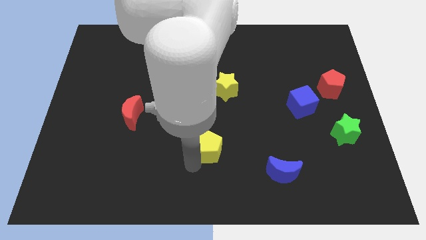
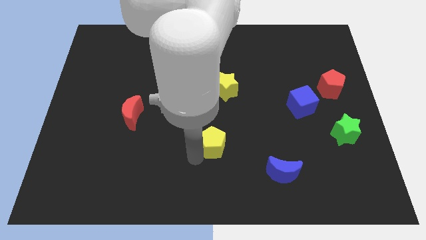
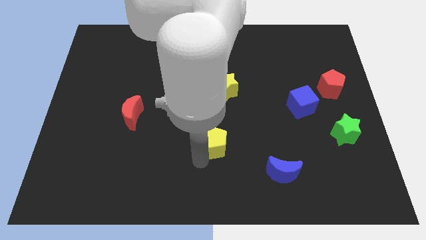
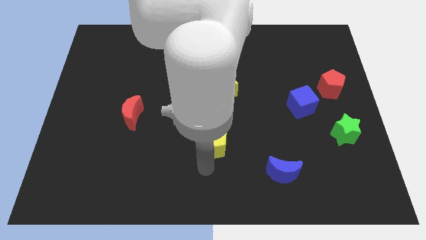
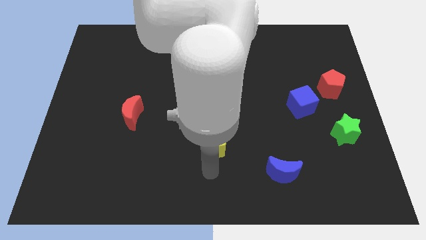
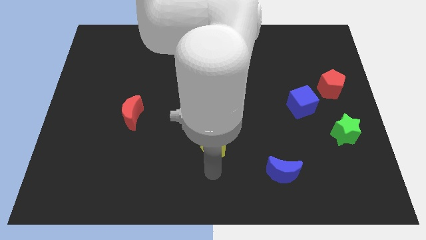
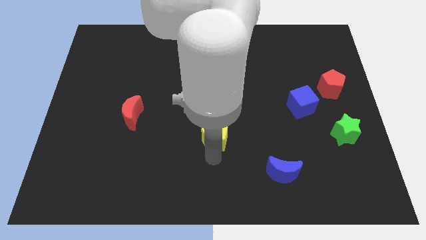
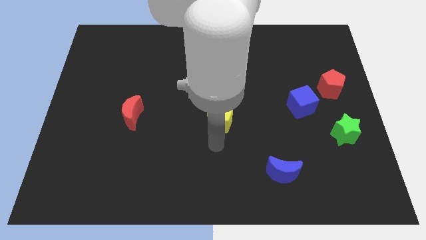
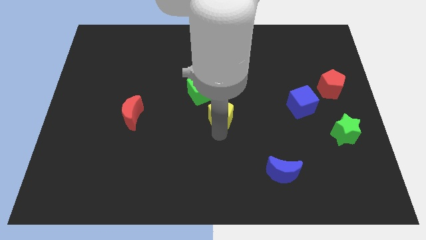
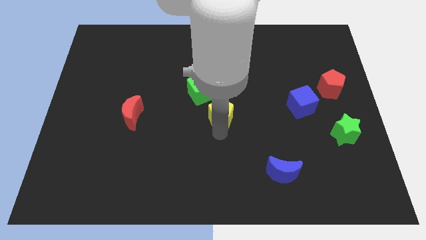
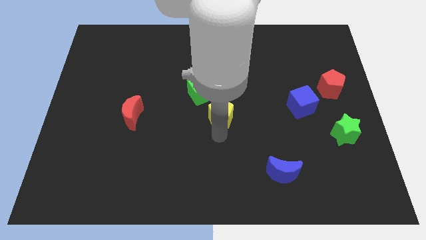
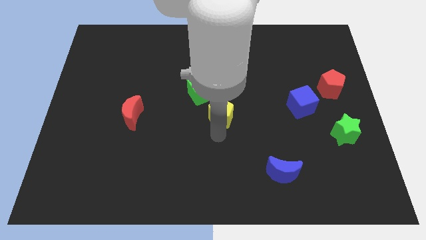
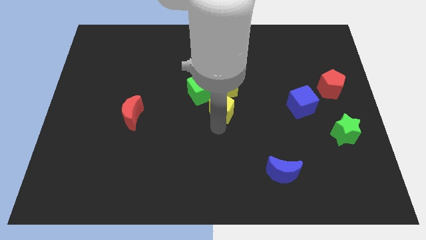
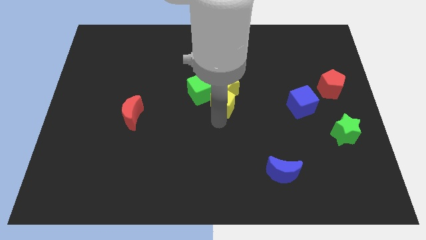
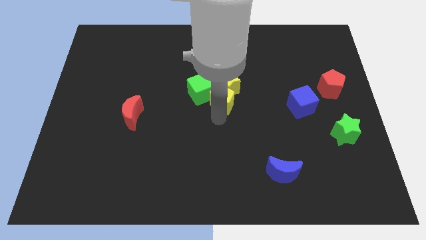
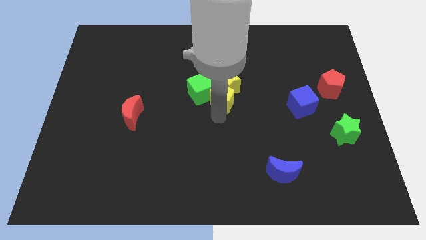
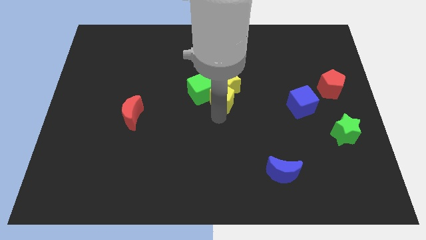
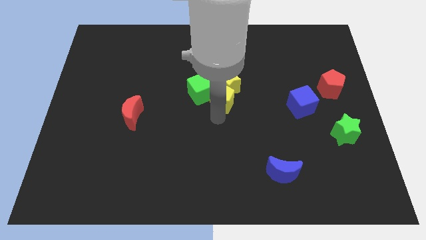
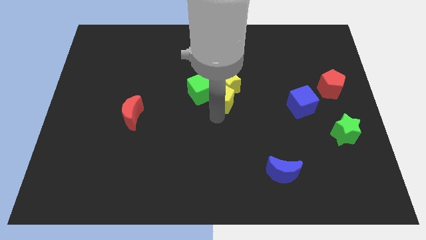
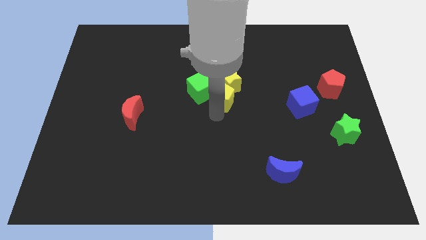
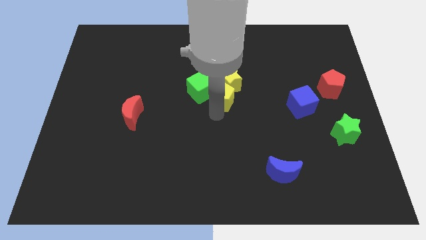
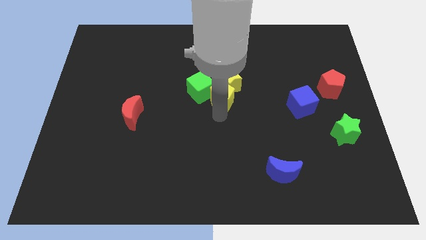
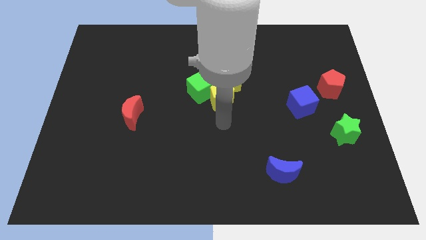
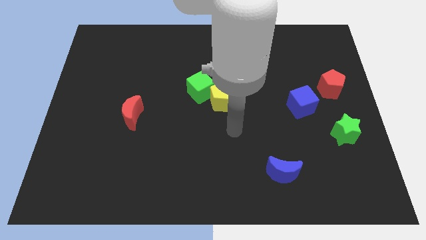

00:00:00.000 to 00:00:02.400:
push the yellow pentagon below into yellow star

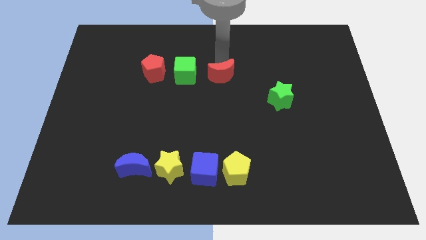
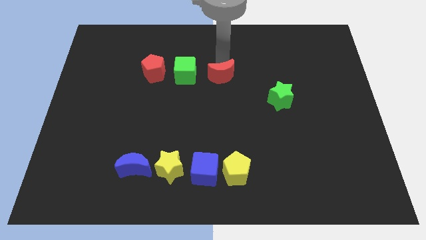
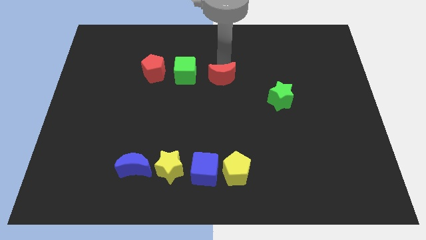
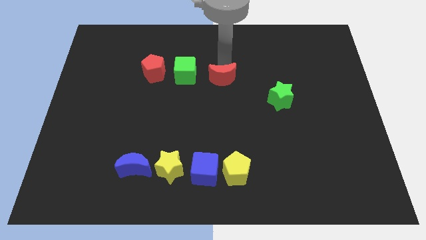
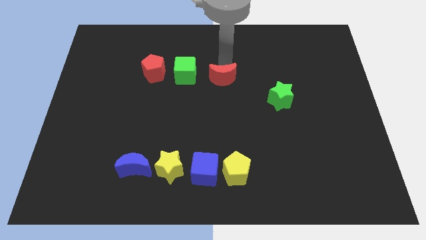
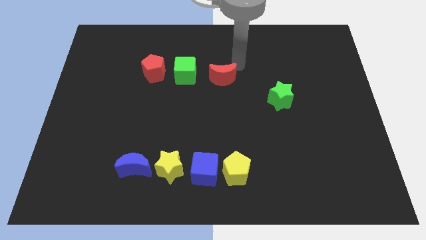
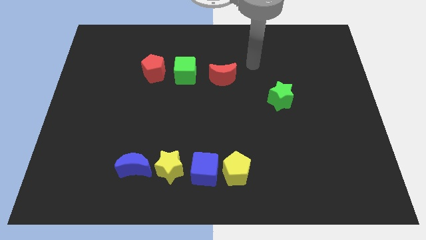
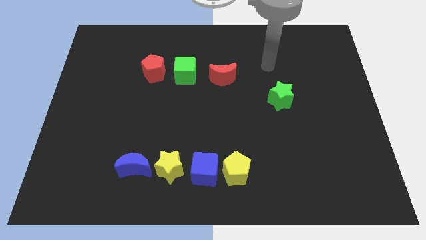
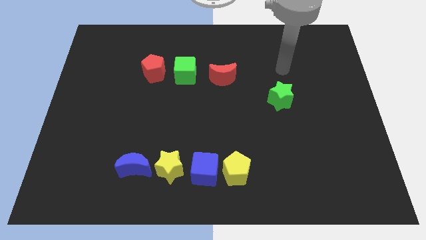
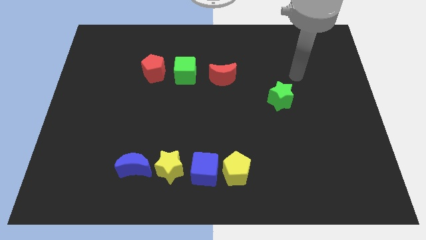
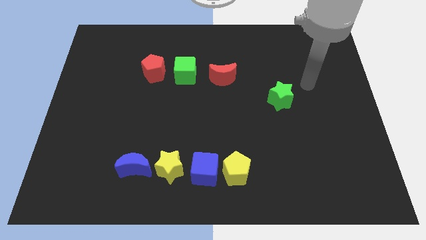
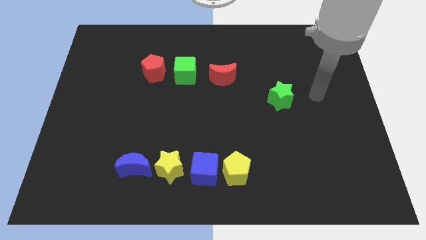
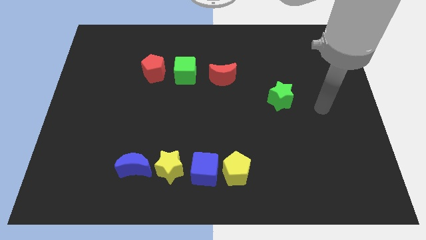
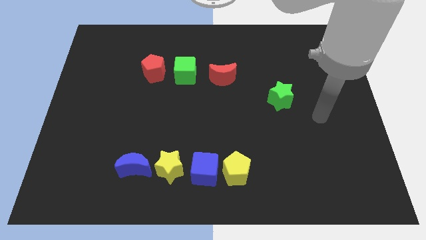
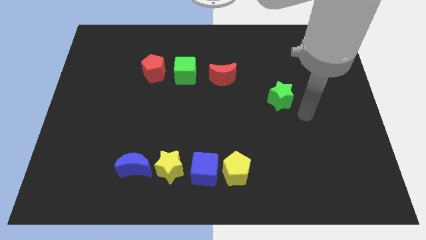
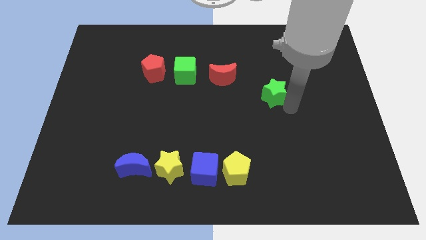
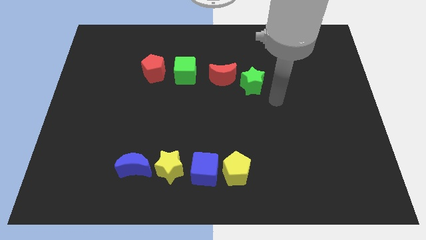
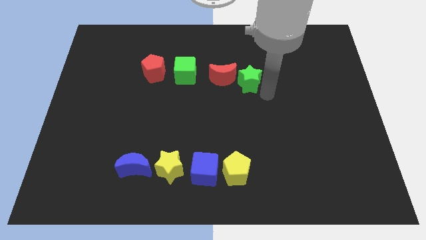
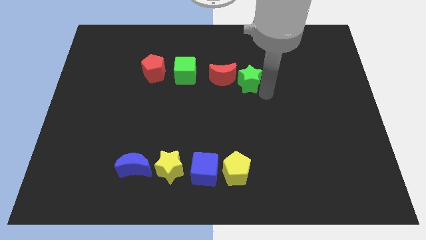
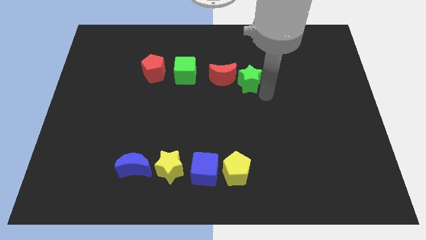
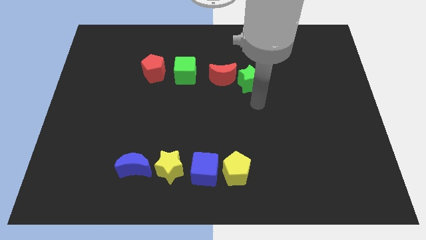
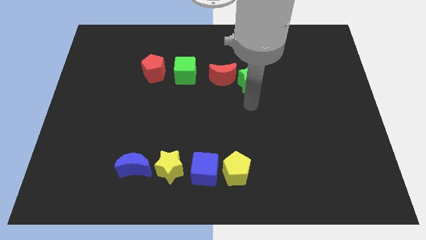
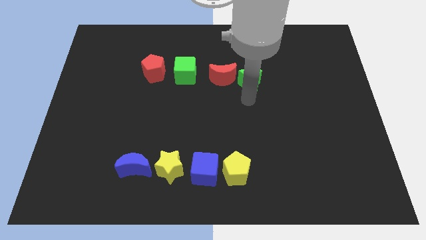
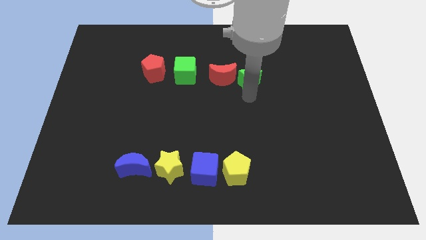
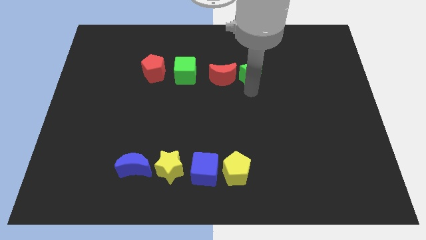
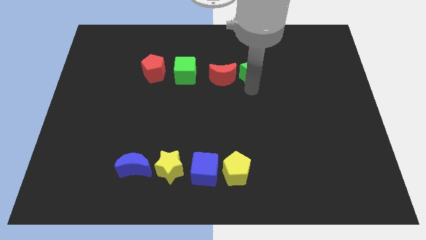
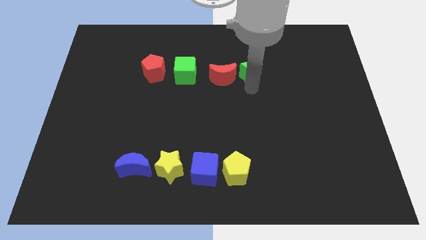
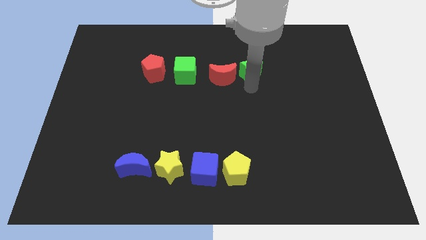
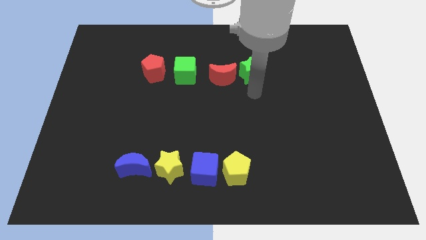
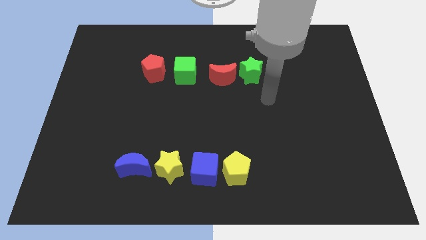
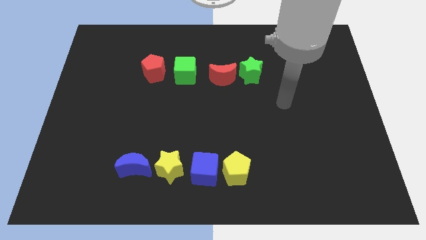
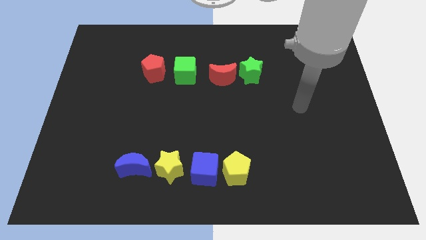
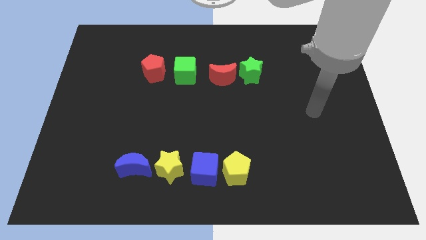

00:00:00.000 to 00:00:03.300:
push the green star to the right side of the red crescent

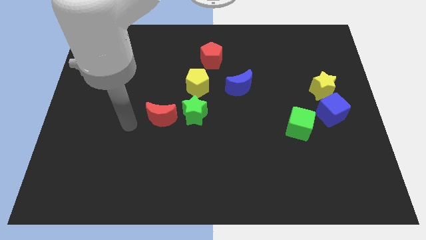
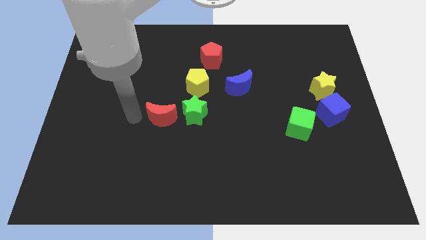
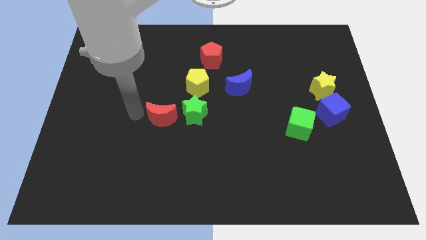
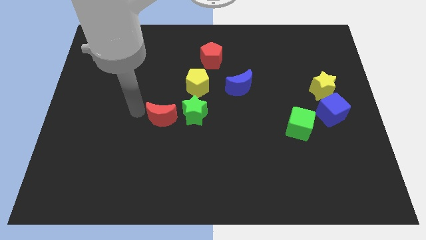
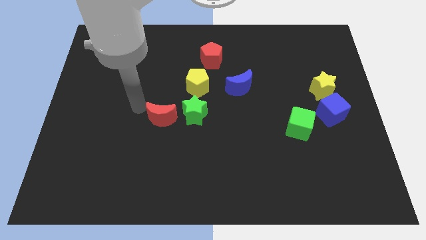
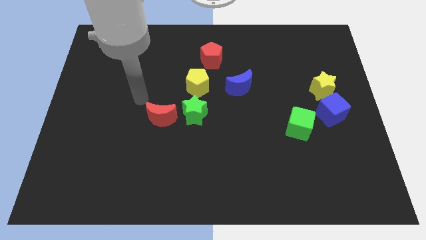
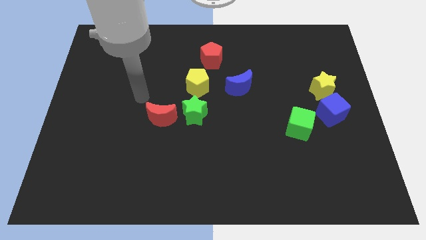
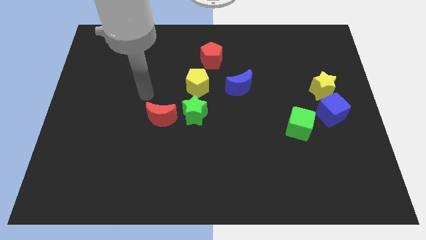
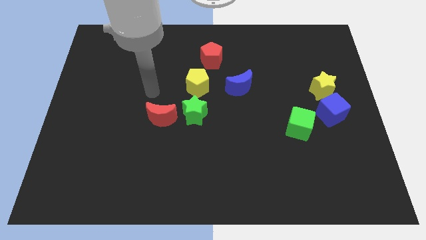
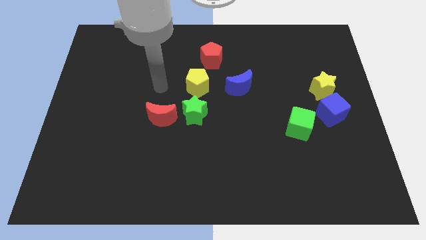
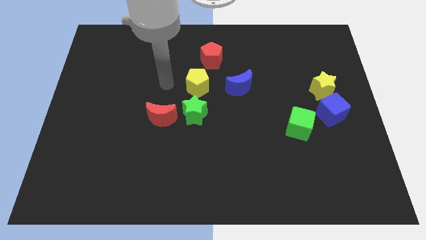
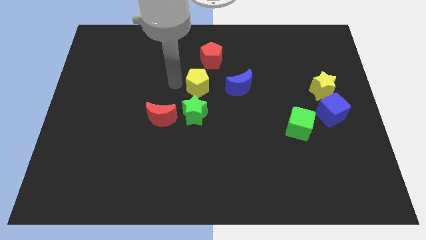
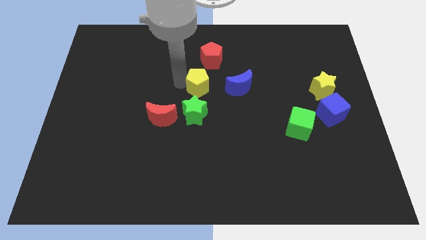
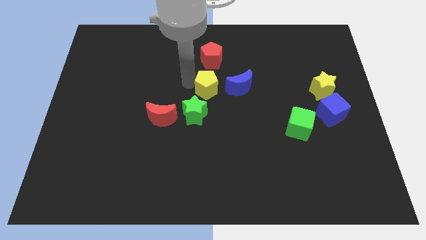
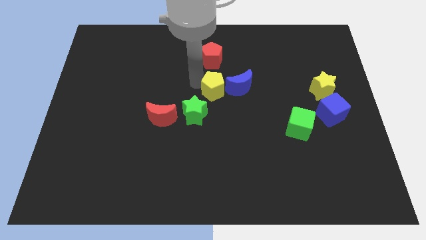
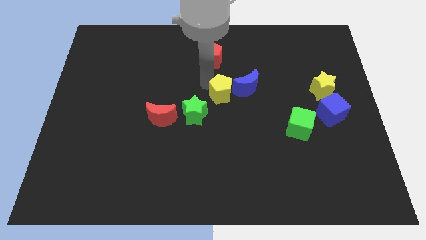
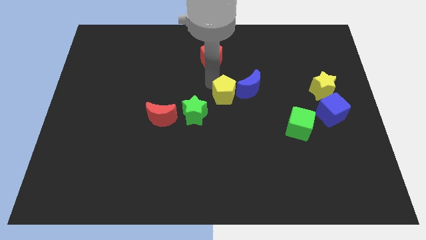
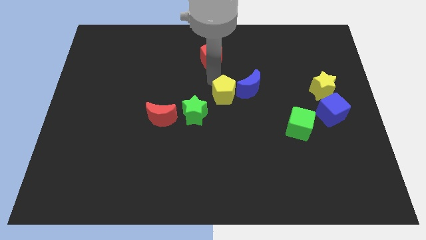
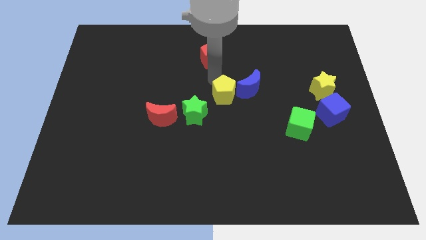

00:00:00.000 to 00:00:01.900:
place your arm in between the red pentagon and yellow pentagon

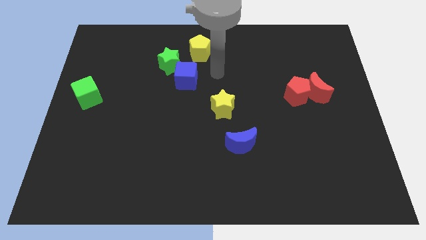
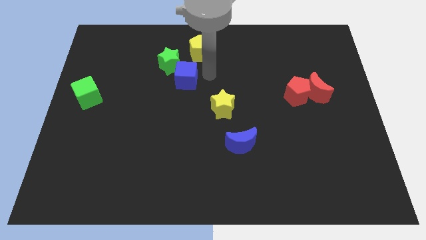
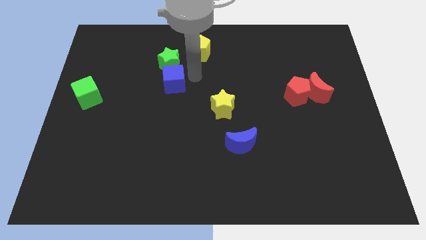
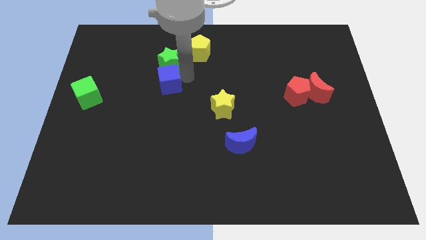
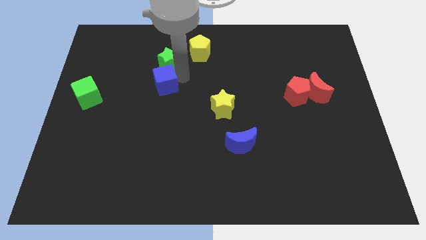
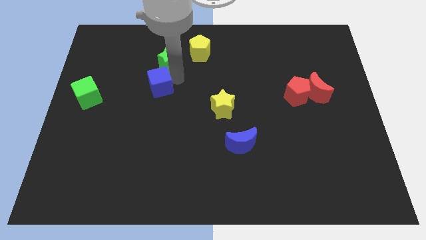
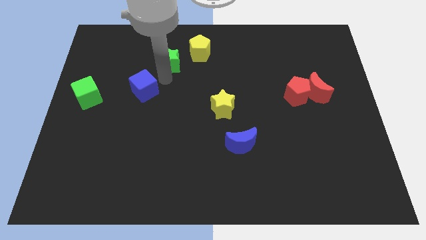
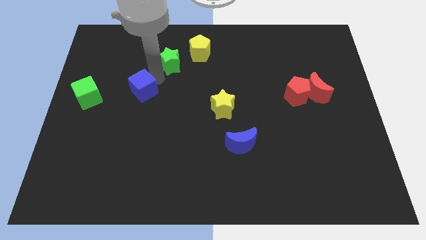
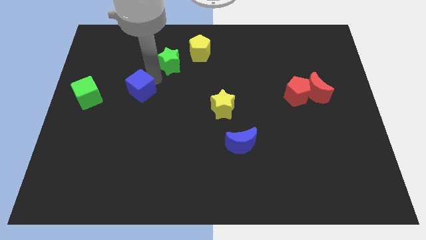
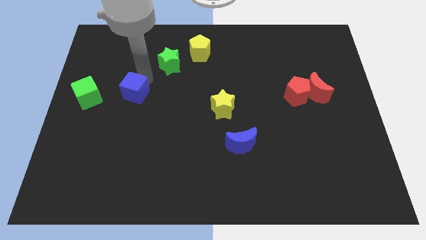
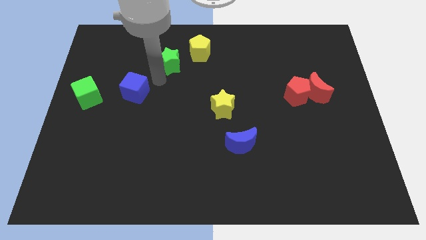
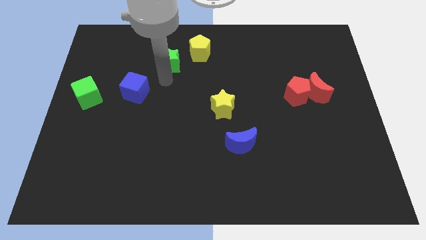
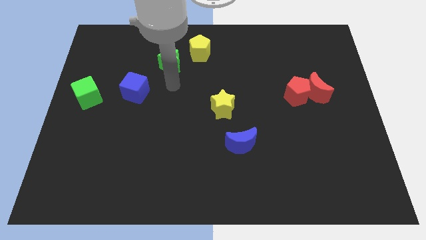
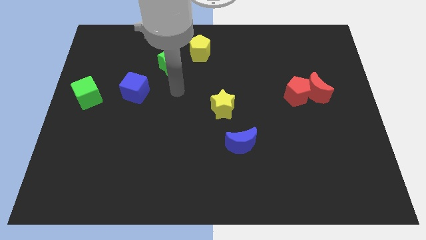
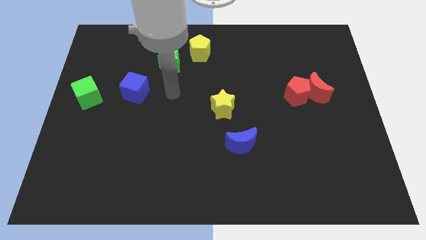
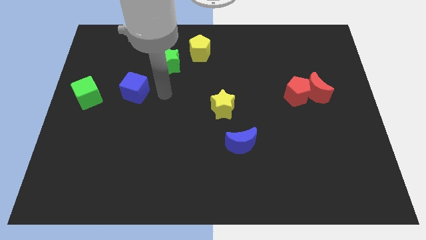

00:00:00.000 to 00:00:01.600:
place the blue cube right to the green cube
